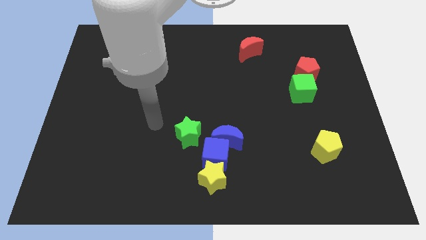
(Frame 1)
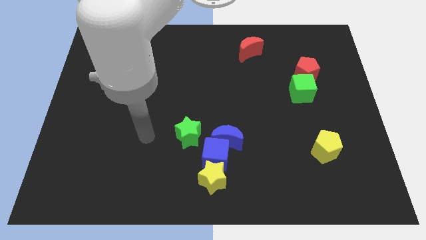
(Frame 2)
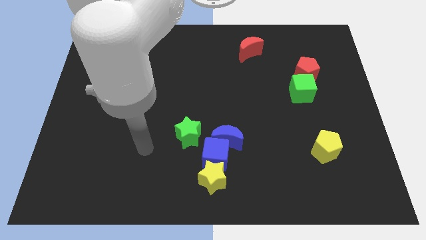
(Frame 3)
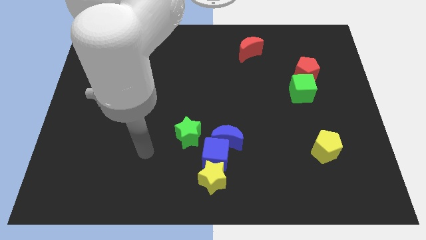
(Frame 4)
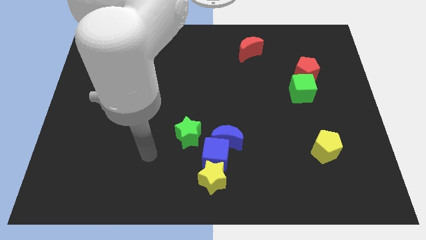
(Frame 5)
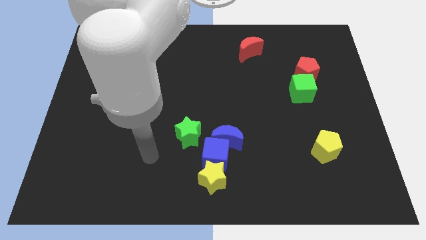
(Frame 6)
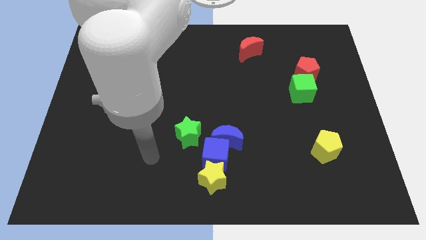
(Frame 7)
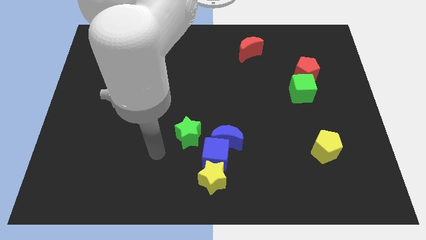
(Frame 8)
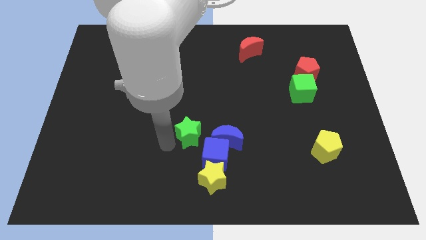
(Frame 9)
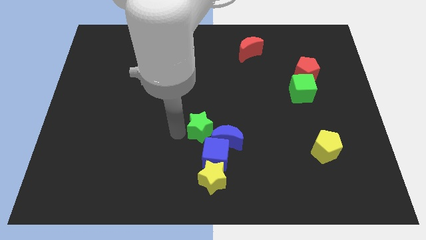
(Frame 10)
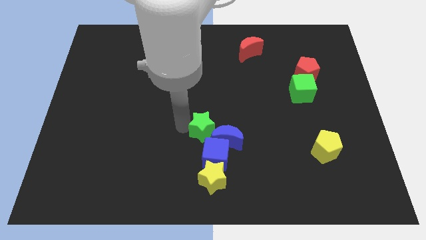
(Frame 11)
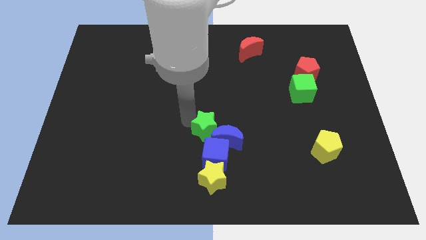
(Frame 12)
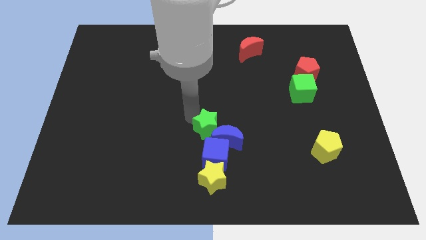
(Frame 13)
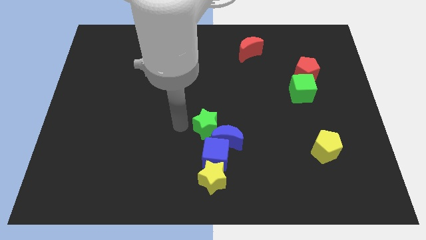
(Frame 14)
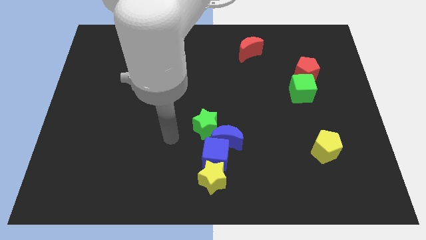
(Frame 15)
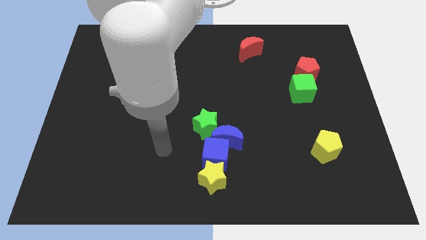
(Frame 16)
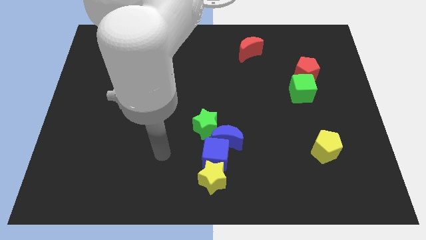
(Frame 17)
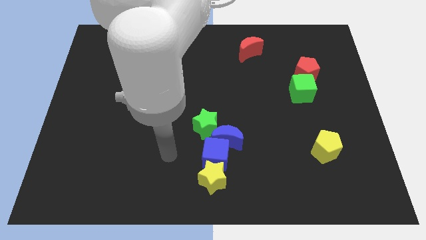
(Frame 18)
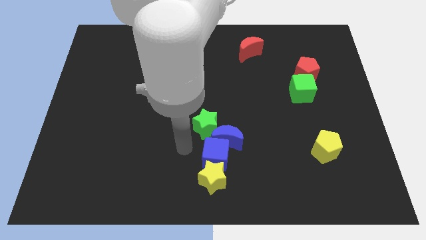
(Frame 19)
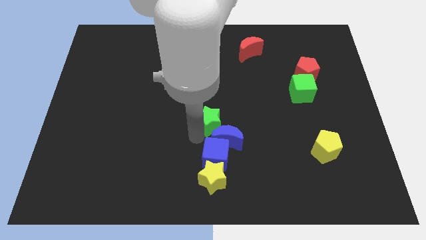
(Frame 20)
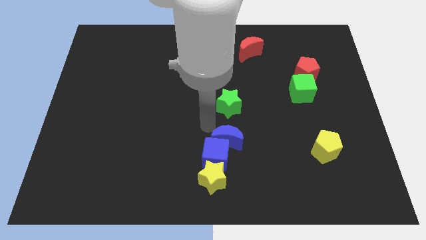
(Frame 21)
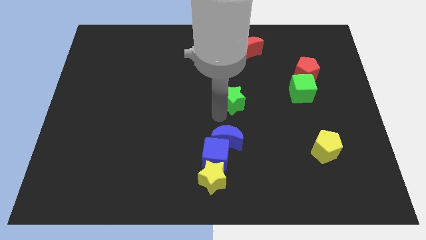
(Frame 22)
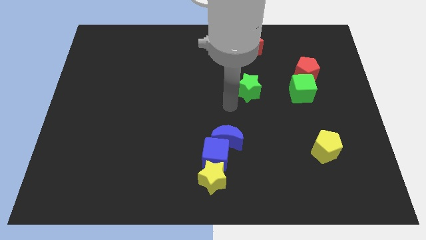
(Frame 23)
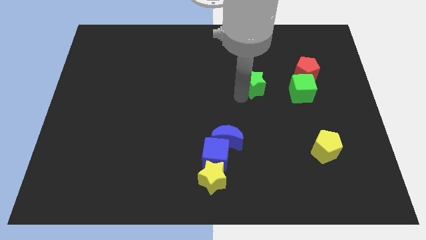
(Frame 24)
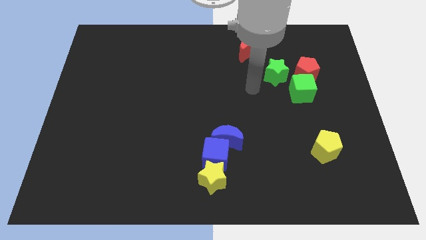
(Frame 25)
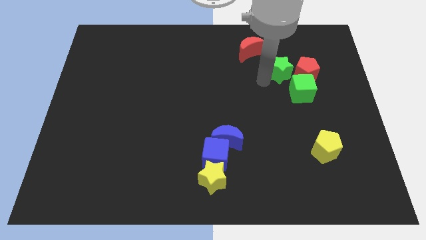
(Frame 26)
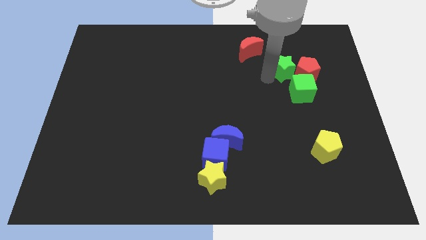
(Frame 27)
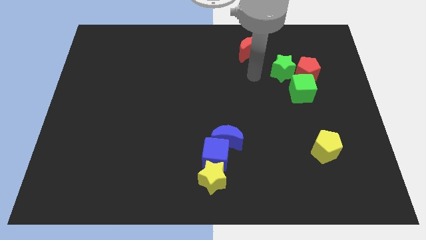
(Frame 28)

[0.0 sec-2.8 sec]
slide the green star close to the red pentagon

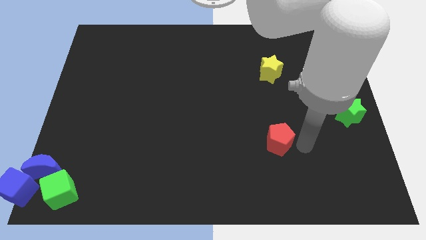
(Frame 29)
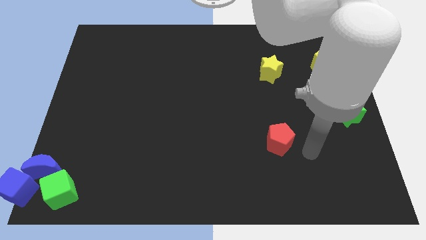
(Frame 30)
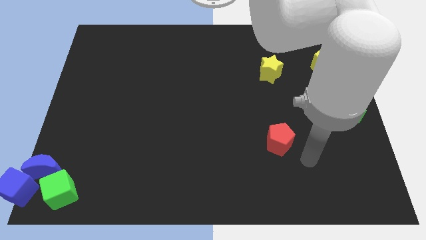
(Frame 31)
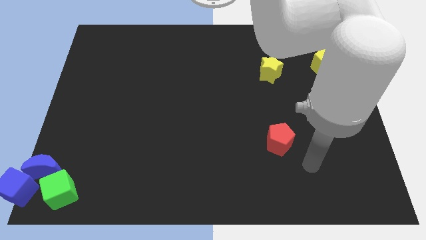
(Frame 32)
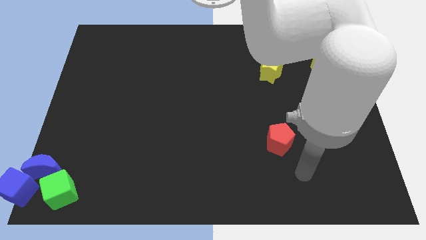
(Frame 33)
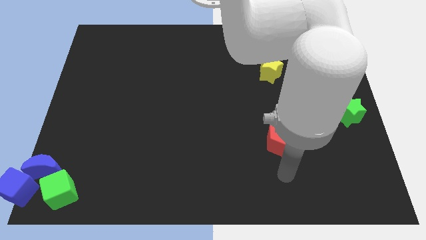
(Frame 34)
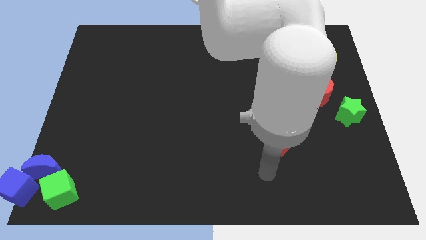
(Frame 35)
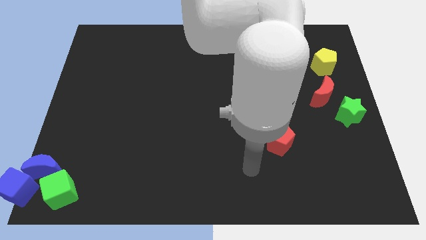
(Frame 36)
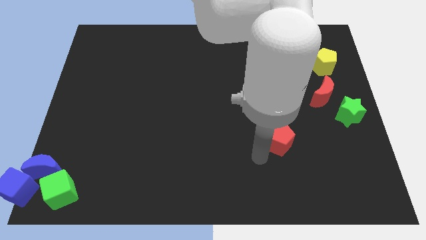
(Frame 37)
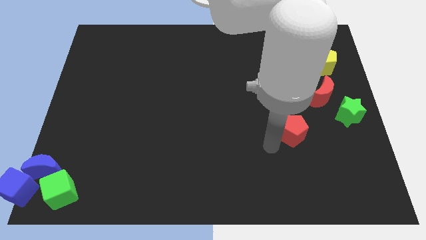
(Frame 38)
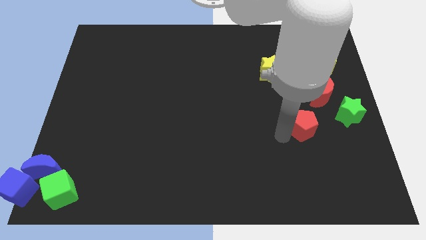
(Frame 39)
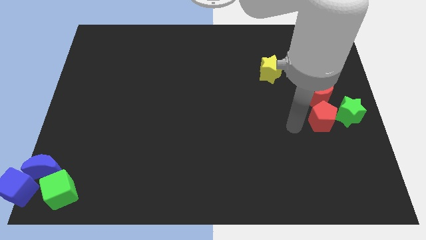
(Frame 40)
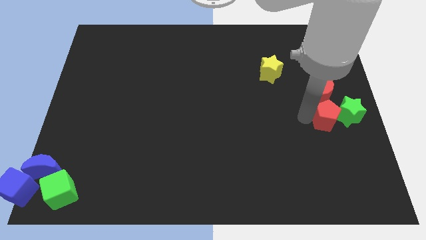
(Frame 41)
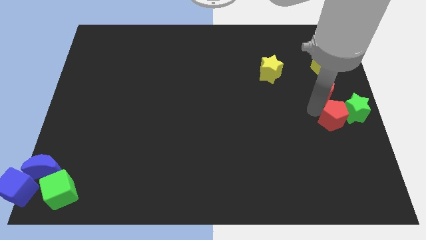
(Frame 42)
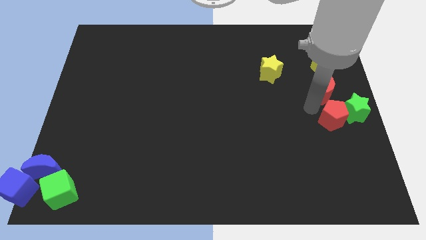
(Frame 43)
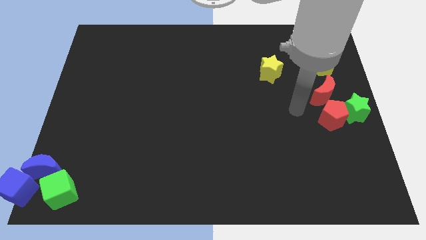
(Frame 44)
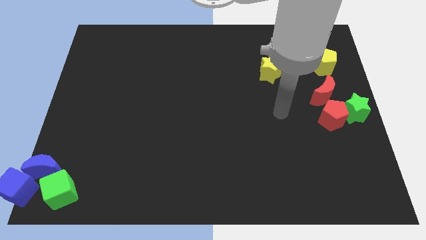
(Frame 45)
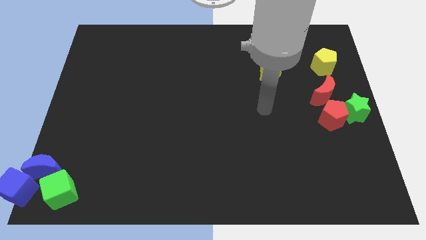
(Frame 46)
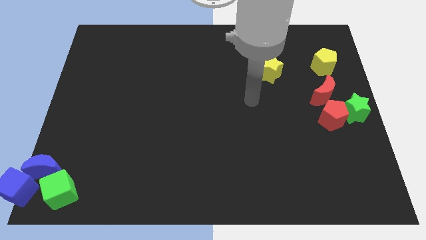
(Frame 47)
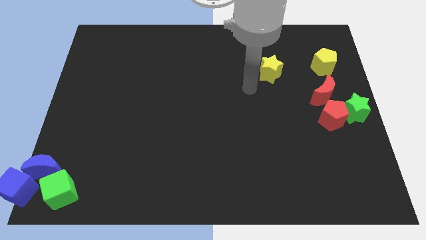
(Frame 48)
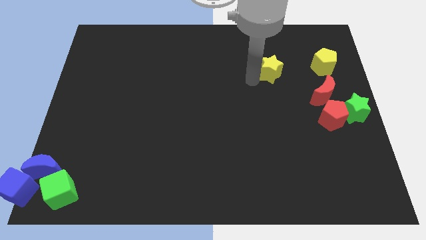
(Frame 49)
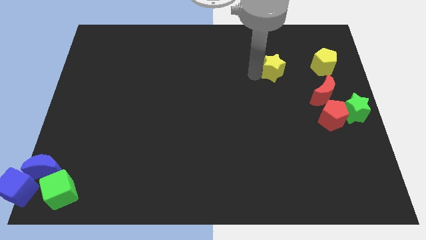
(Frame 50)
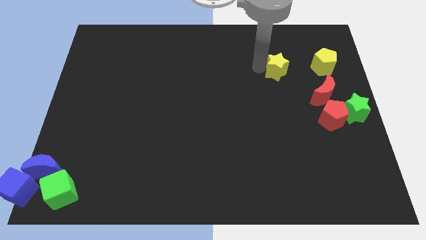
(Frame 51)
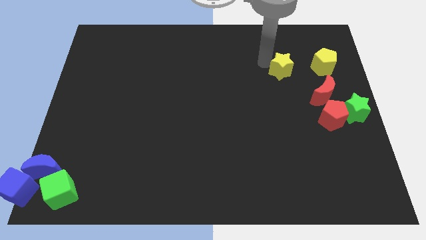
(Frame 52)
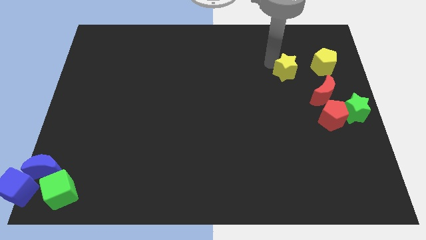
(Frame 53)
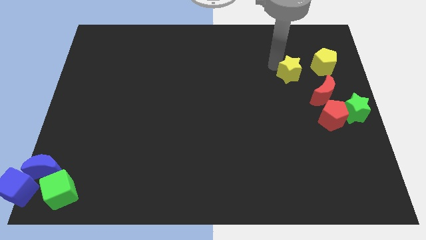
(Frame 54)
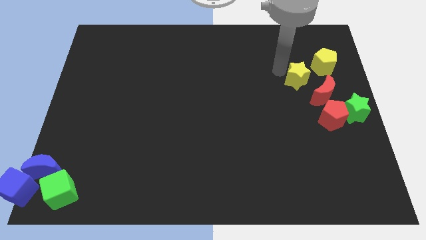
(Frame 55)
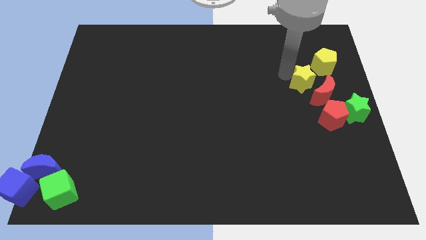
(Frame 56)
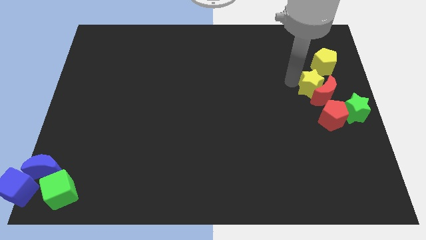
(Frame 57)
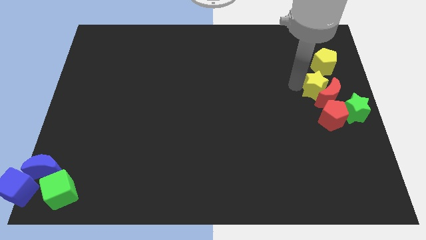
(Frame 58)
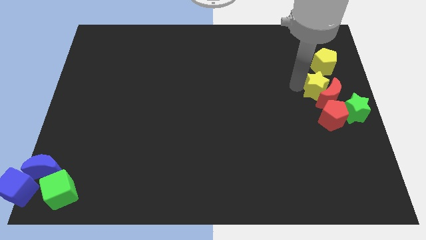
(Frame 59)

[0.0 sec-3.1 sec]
push the red pentagon into green star and yellow star into red moon

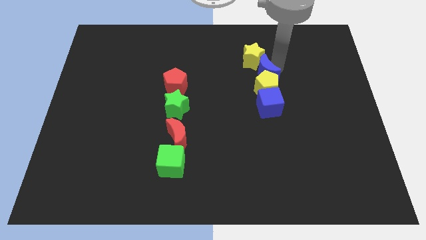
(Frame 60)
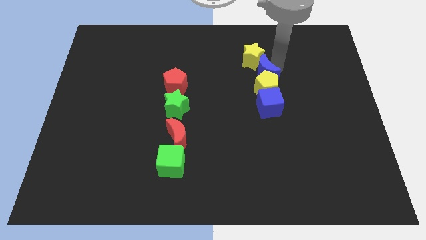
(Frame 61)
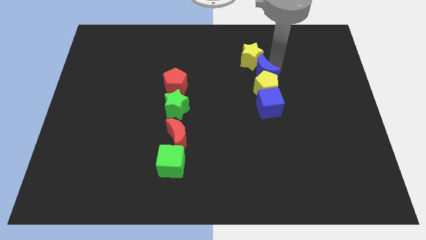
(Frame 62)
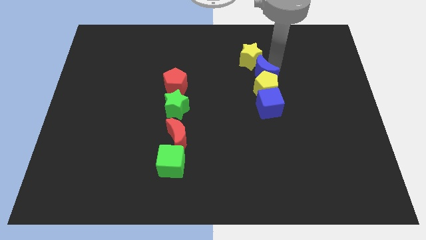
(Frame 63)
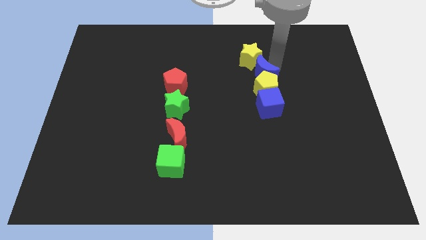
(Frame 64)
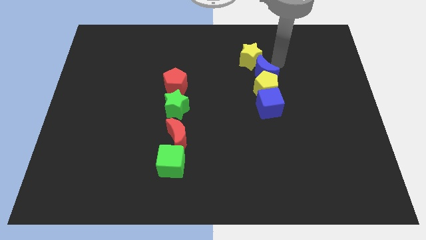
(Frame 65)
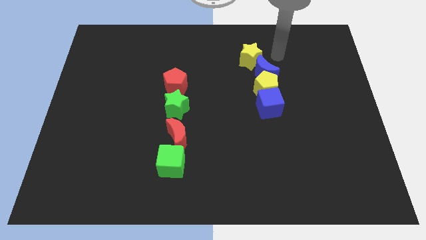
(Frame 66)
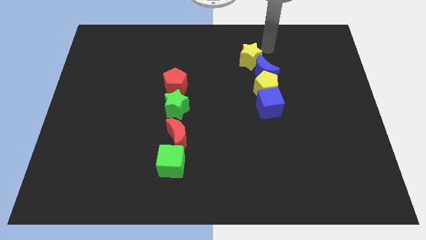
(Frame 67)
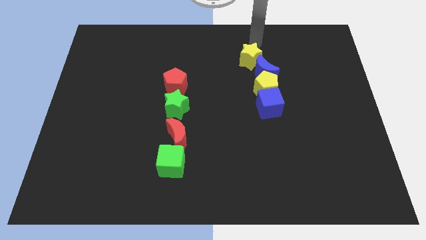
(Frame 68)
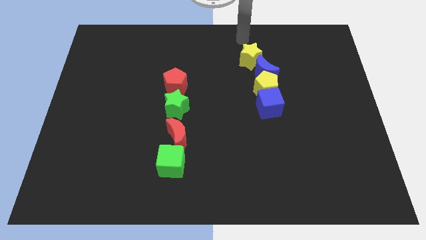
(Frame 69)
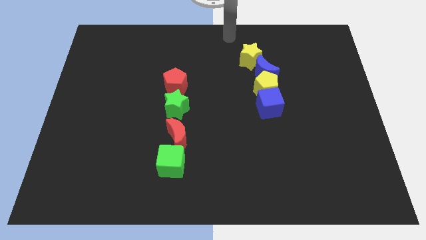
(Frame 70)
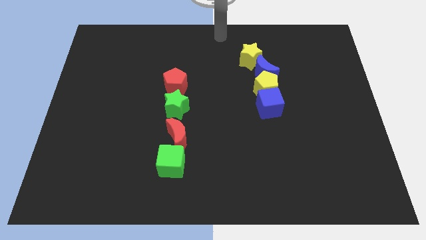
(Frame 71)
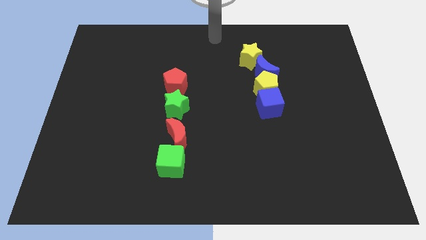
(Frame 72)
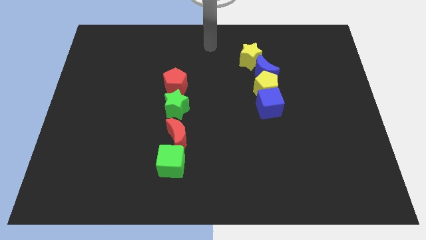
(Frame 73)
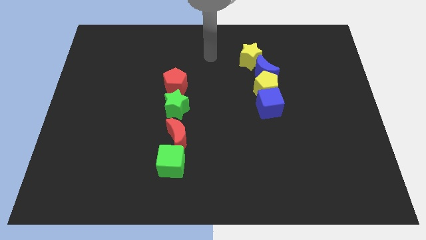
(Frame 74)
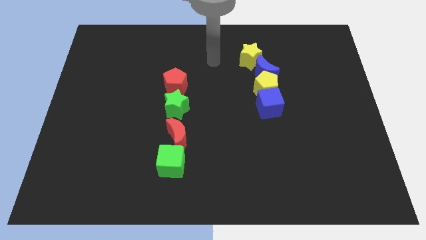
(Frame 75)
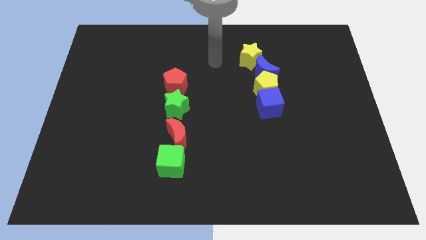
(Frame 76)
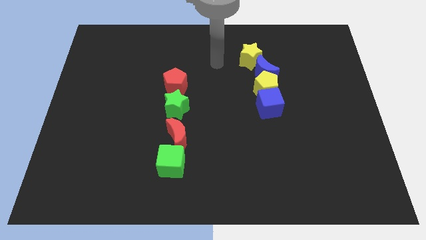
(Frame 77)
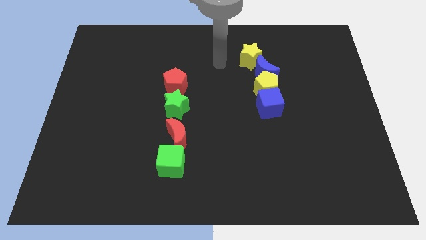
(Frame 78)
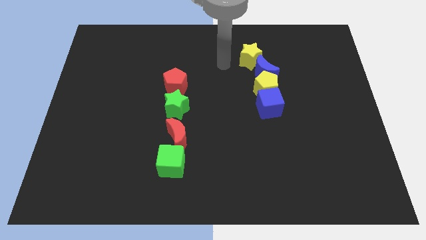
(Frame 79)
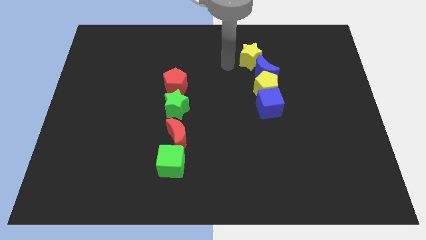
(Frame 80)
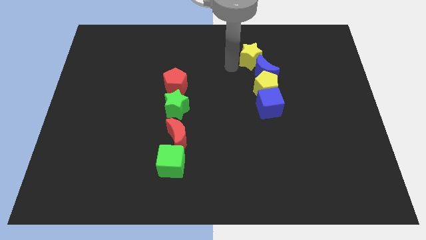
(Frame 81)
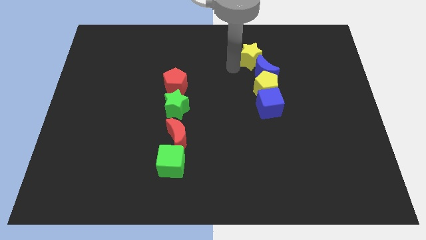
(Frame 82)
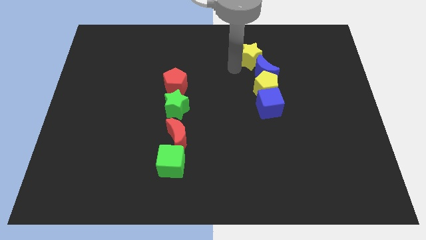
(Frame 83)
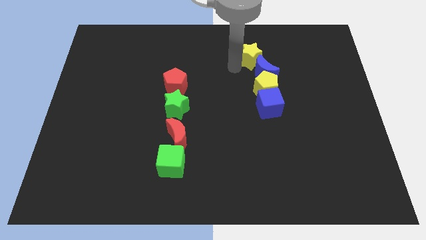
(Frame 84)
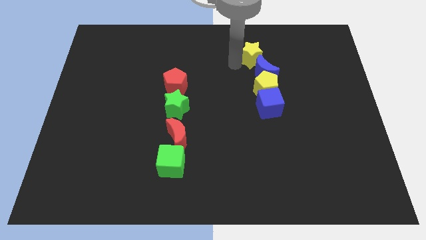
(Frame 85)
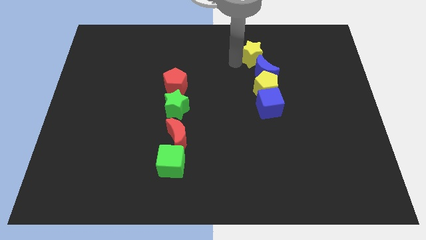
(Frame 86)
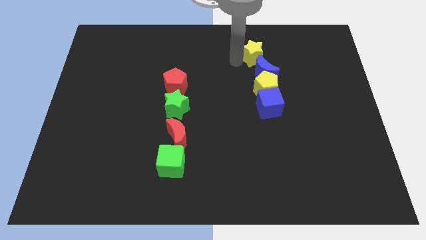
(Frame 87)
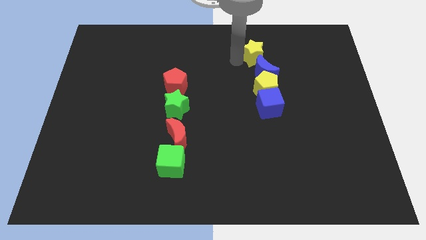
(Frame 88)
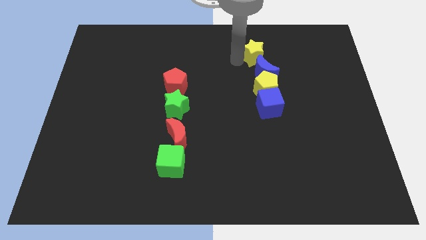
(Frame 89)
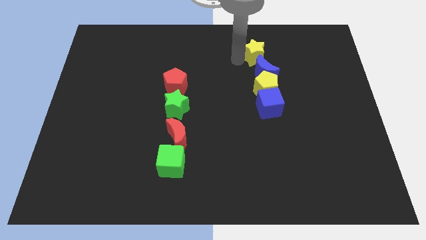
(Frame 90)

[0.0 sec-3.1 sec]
push the blue moon into the yellow star
